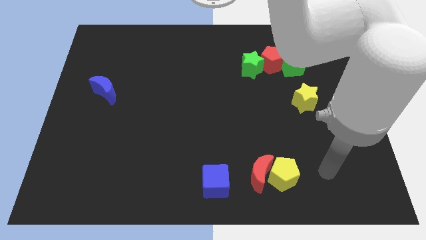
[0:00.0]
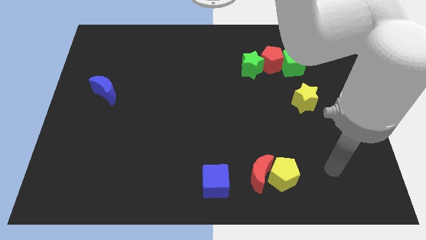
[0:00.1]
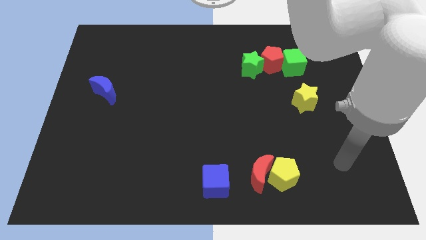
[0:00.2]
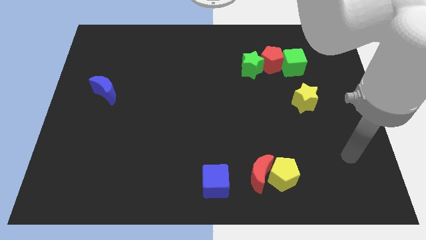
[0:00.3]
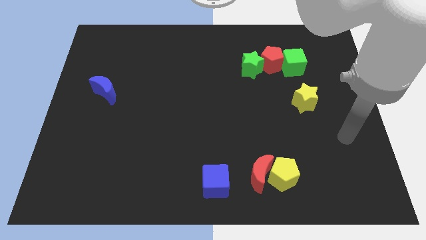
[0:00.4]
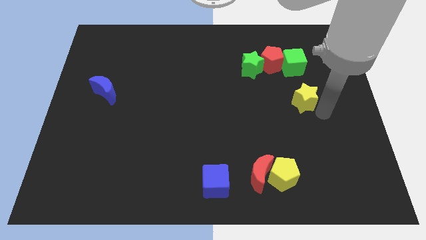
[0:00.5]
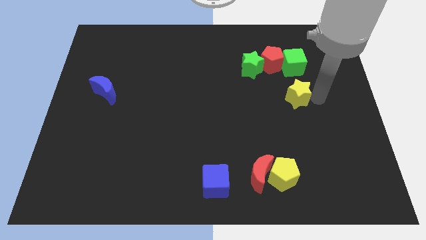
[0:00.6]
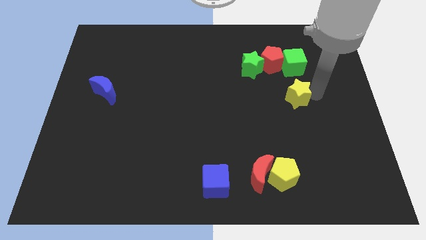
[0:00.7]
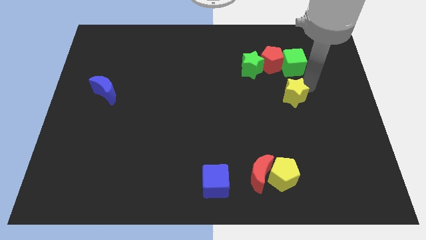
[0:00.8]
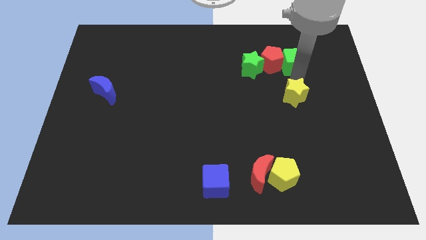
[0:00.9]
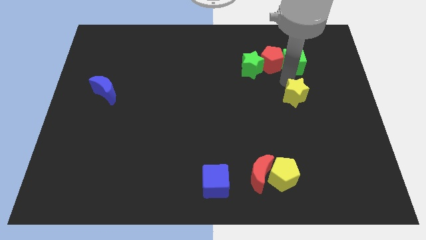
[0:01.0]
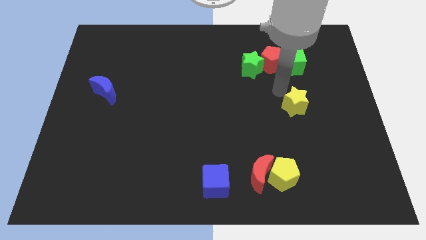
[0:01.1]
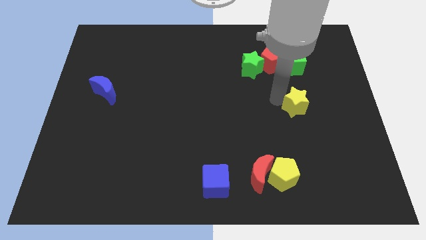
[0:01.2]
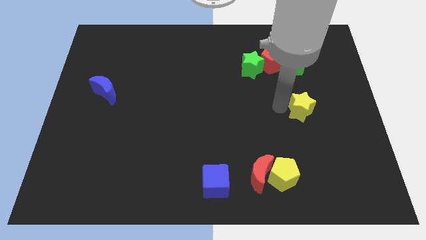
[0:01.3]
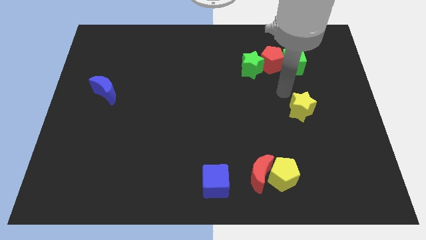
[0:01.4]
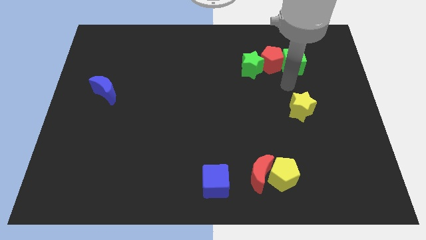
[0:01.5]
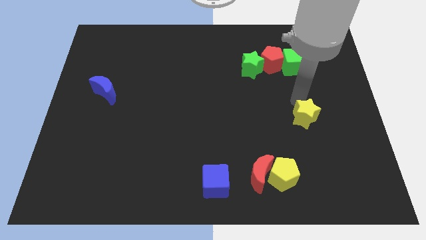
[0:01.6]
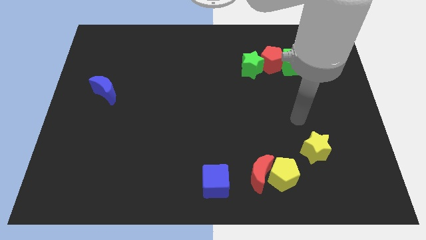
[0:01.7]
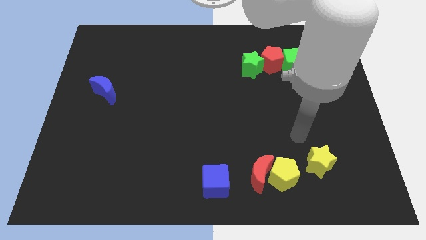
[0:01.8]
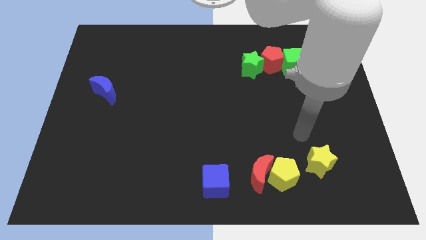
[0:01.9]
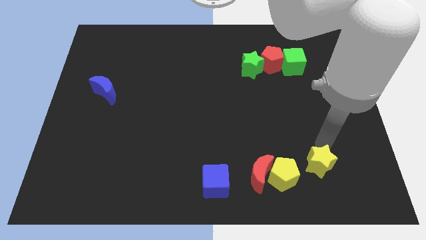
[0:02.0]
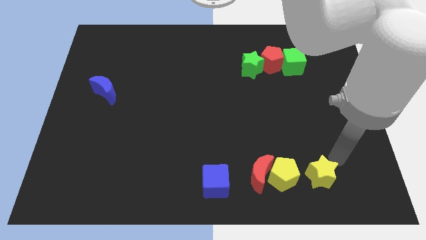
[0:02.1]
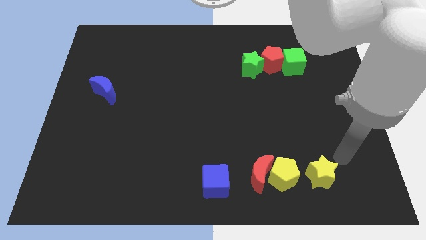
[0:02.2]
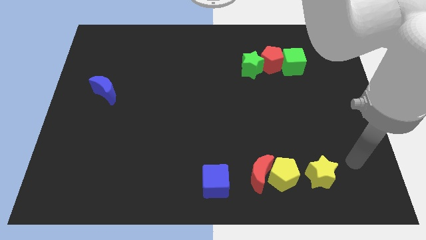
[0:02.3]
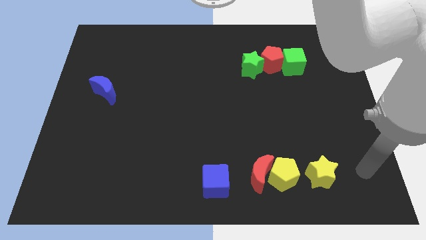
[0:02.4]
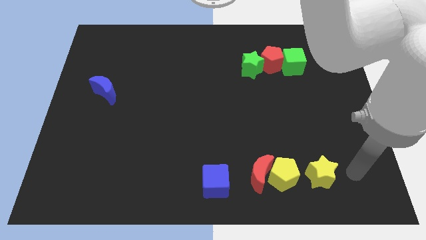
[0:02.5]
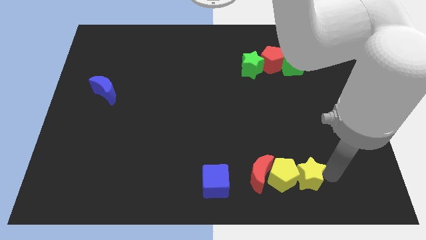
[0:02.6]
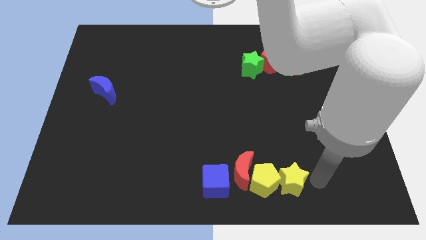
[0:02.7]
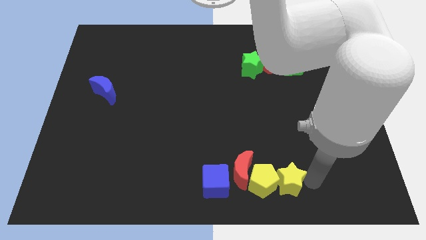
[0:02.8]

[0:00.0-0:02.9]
put the yellow star to the yellow pentagon

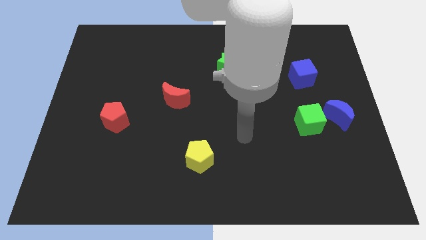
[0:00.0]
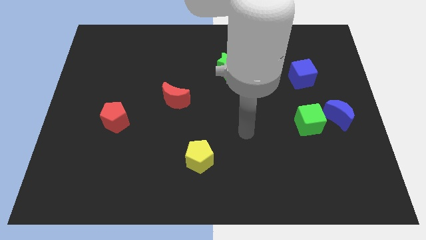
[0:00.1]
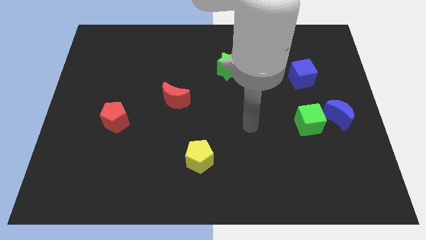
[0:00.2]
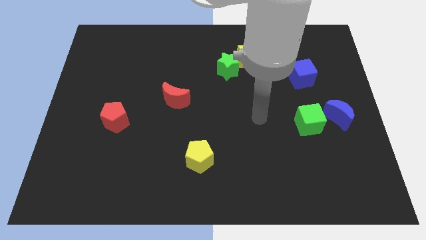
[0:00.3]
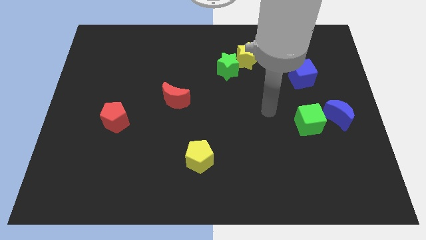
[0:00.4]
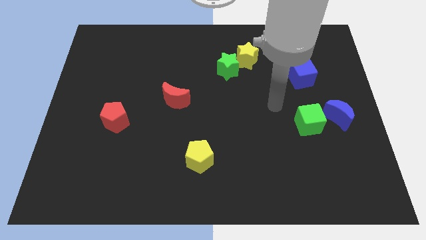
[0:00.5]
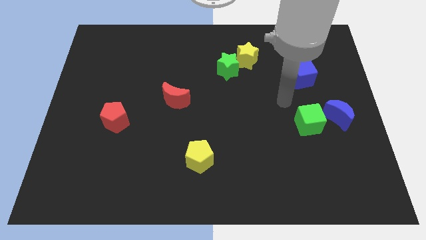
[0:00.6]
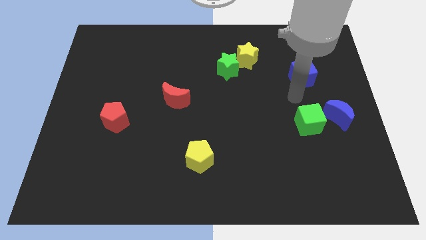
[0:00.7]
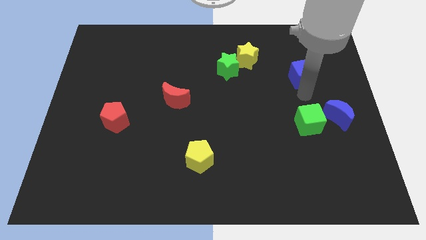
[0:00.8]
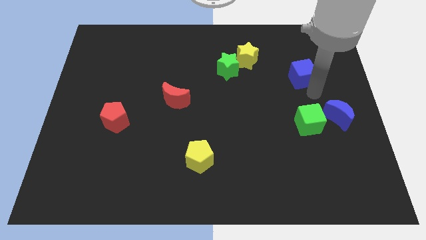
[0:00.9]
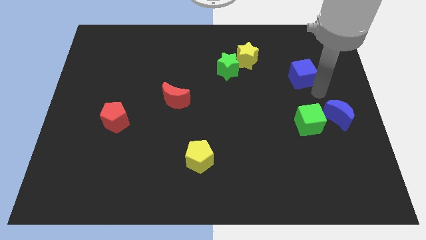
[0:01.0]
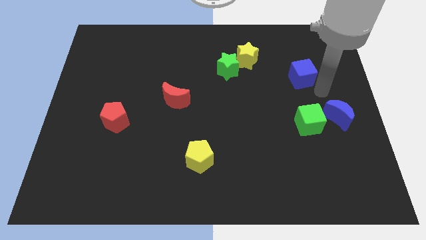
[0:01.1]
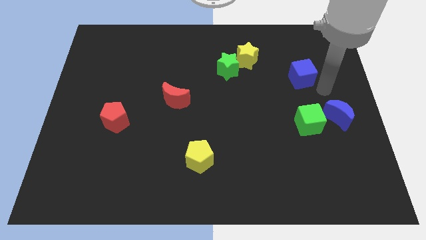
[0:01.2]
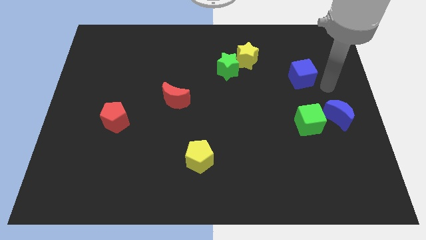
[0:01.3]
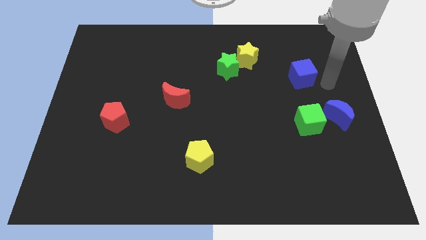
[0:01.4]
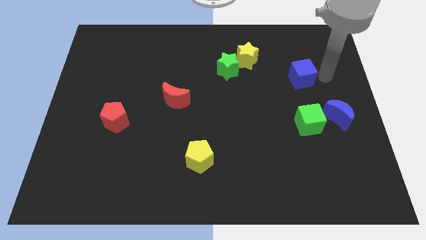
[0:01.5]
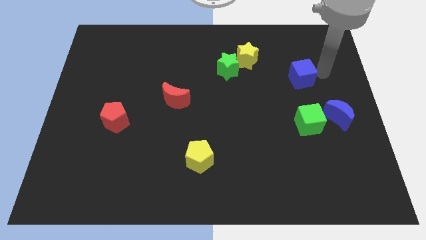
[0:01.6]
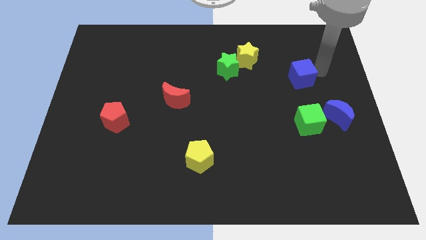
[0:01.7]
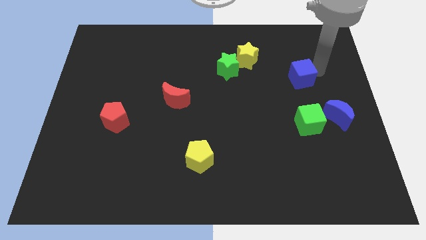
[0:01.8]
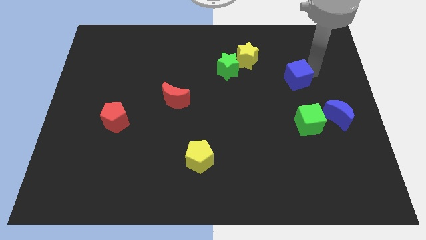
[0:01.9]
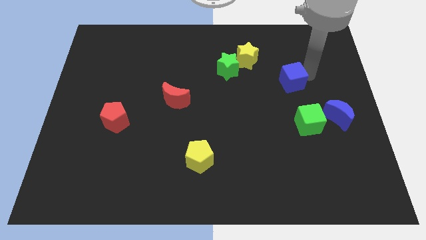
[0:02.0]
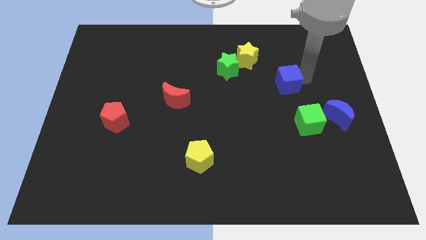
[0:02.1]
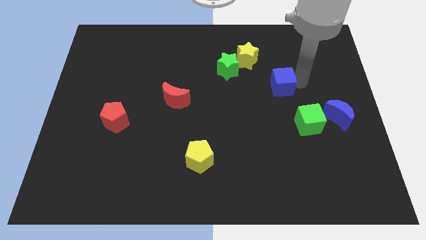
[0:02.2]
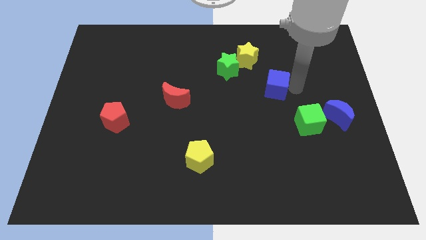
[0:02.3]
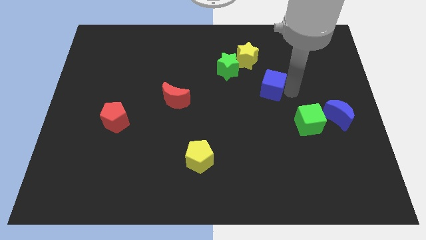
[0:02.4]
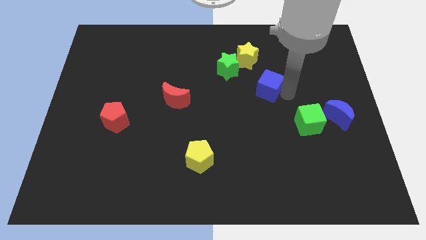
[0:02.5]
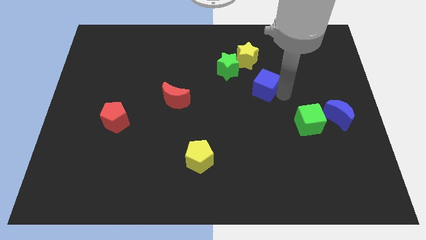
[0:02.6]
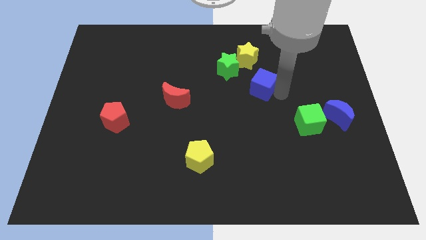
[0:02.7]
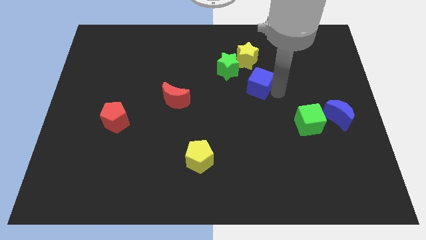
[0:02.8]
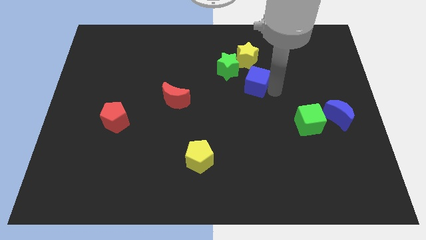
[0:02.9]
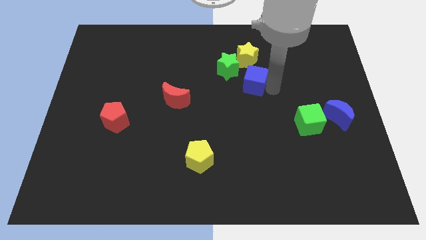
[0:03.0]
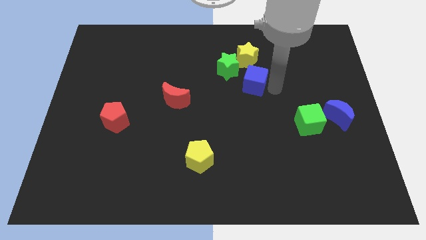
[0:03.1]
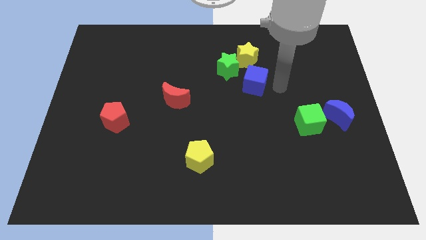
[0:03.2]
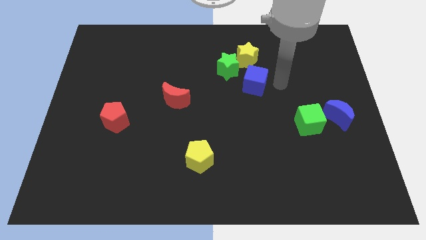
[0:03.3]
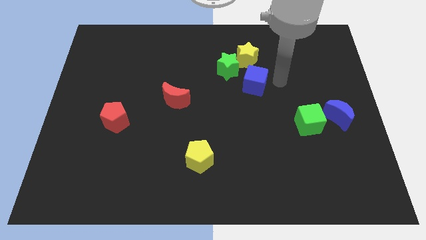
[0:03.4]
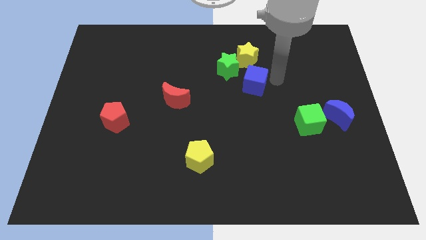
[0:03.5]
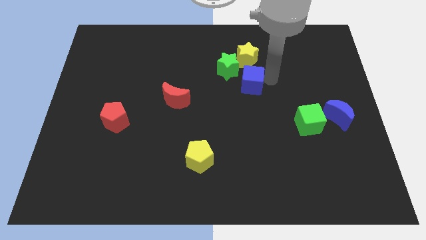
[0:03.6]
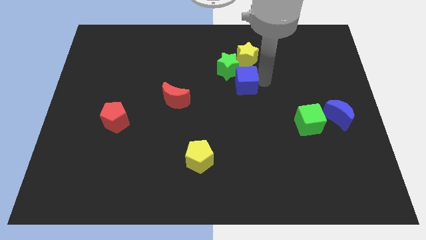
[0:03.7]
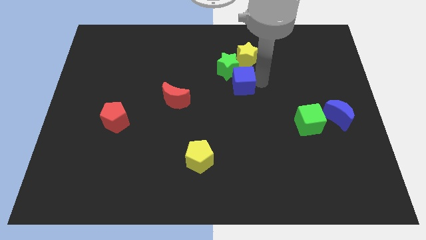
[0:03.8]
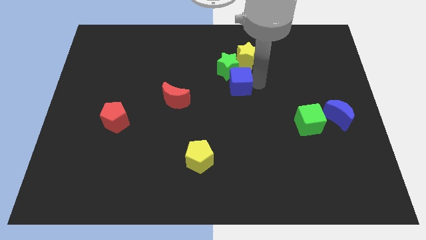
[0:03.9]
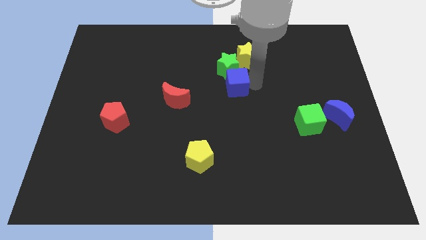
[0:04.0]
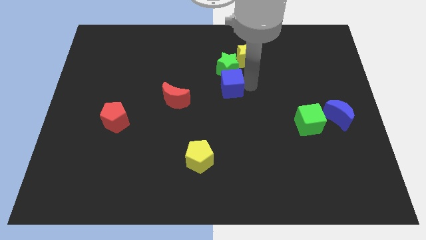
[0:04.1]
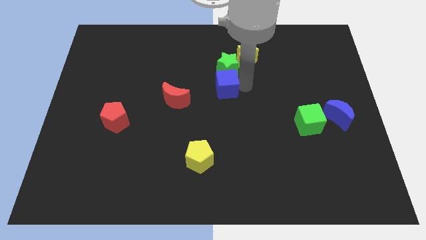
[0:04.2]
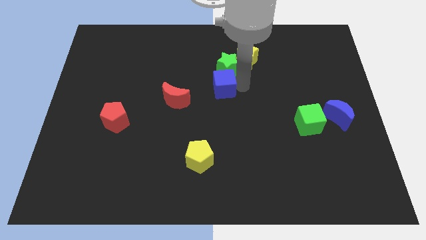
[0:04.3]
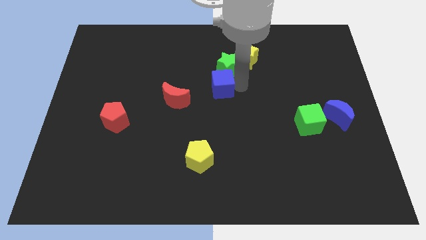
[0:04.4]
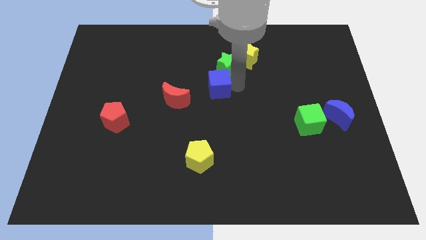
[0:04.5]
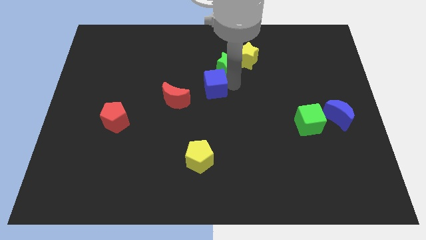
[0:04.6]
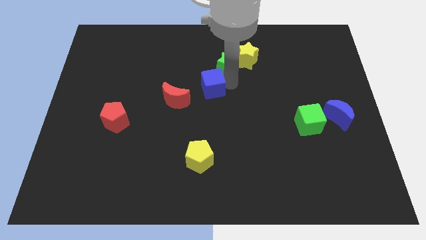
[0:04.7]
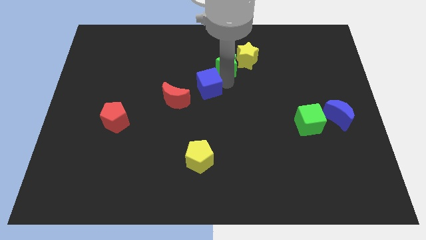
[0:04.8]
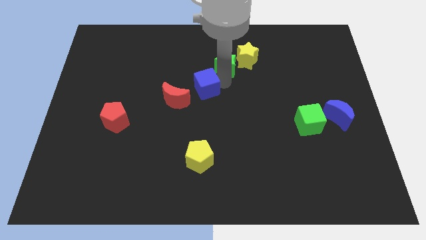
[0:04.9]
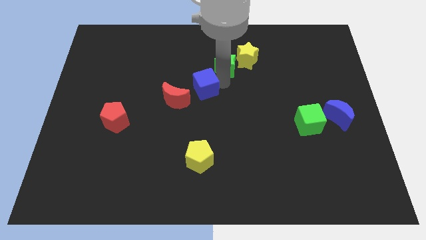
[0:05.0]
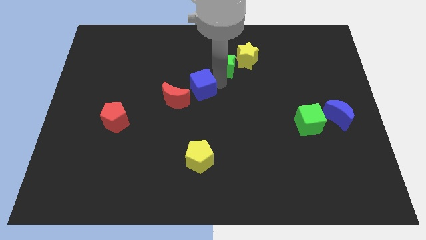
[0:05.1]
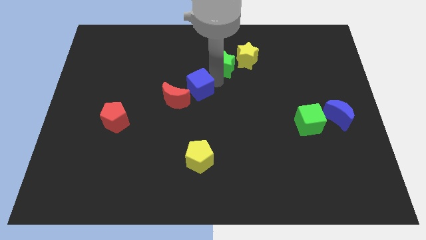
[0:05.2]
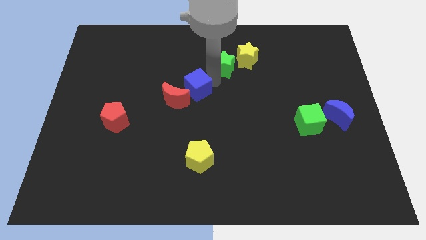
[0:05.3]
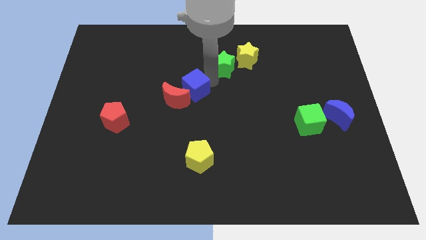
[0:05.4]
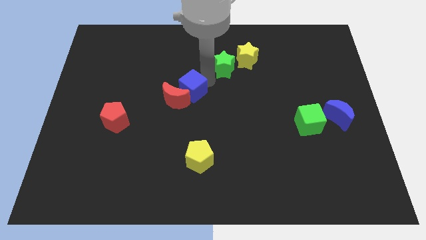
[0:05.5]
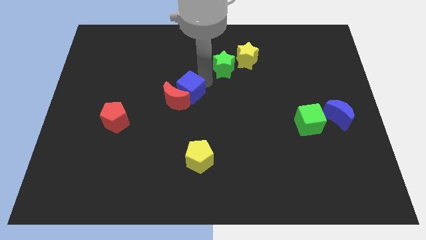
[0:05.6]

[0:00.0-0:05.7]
slide the blue cube close to the red moon
